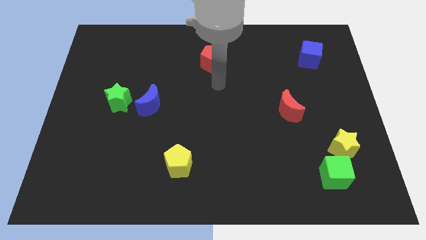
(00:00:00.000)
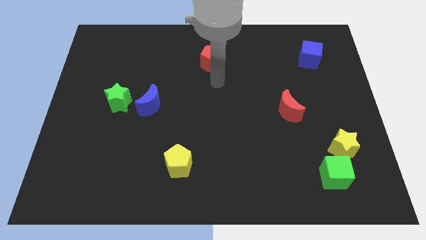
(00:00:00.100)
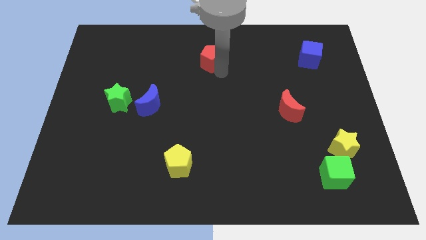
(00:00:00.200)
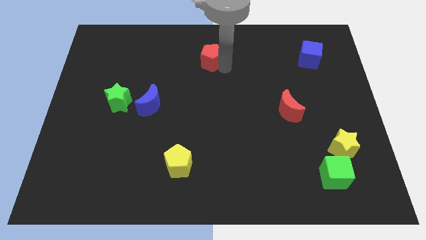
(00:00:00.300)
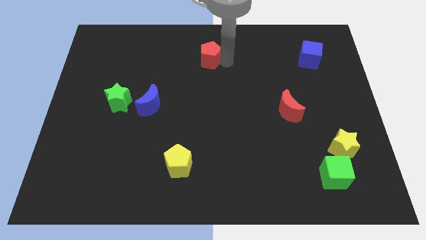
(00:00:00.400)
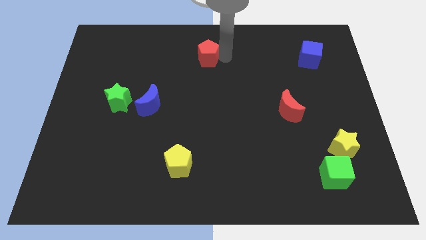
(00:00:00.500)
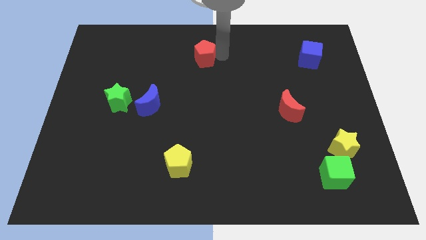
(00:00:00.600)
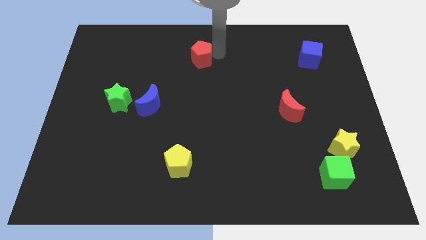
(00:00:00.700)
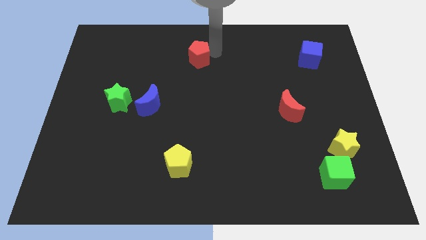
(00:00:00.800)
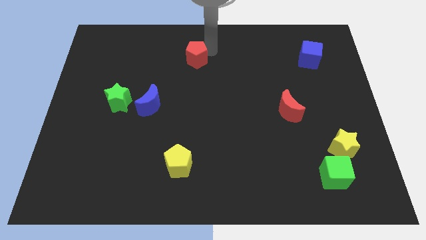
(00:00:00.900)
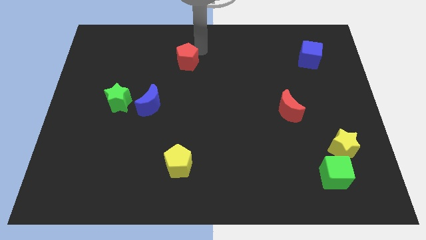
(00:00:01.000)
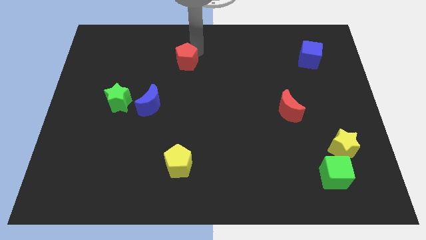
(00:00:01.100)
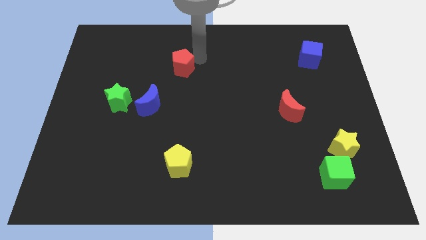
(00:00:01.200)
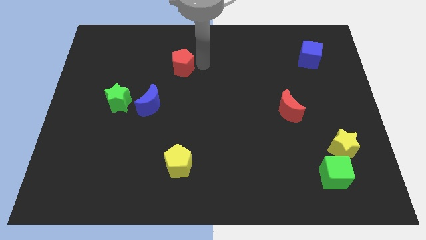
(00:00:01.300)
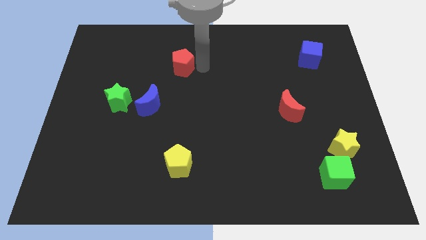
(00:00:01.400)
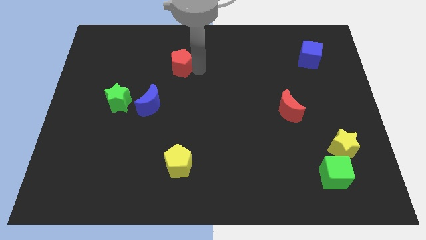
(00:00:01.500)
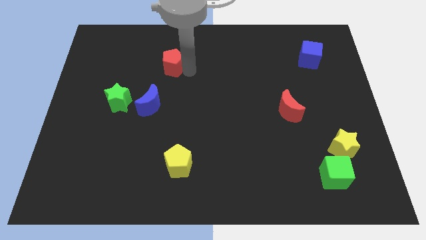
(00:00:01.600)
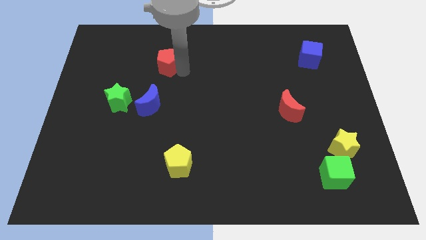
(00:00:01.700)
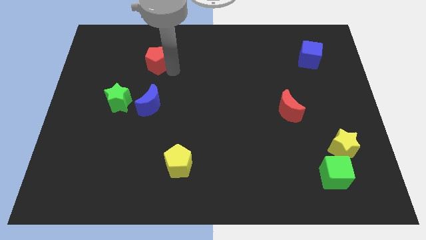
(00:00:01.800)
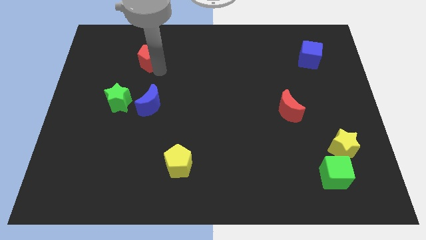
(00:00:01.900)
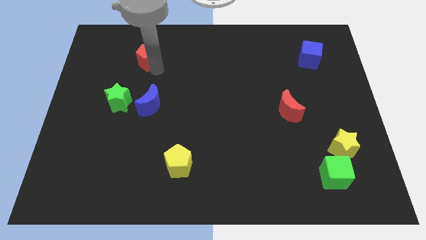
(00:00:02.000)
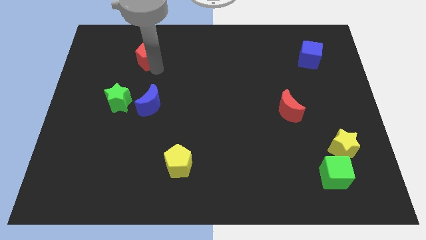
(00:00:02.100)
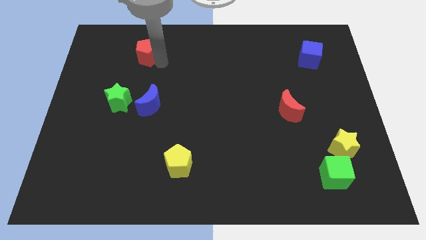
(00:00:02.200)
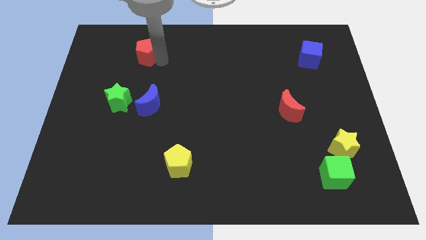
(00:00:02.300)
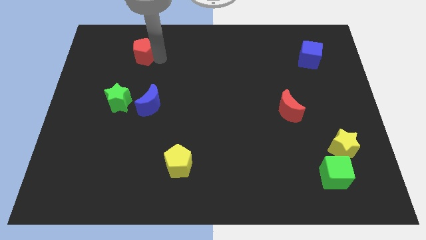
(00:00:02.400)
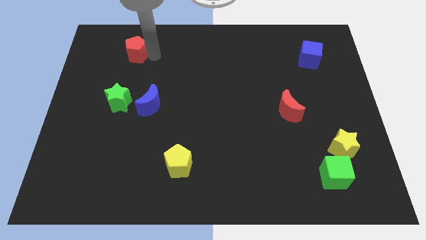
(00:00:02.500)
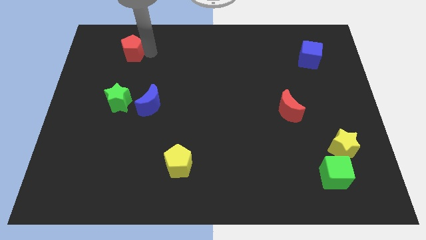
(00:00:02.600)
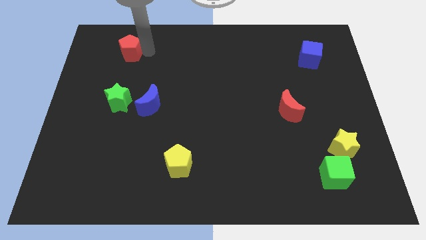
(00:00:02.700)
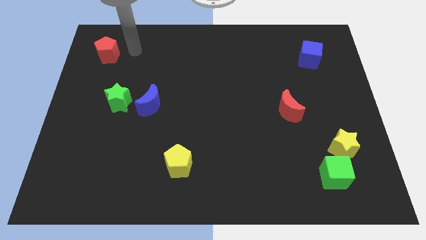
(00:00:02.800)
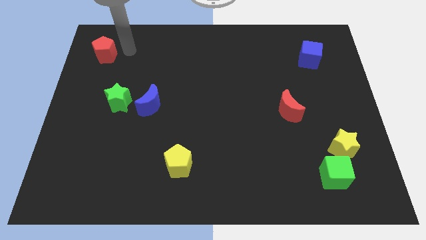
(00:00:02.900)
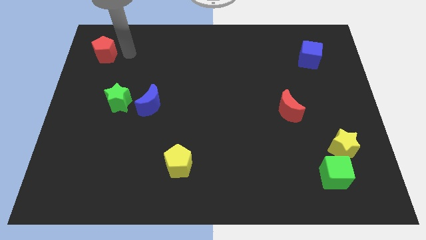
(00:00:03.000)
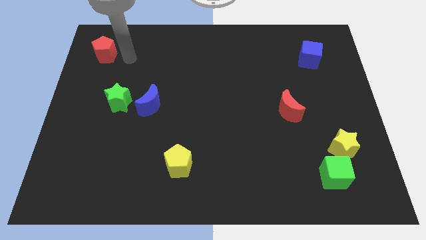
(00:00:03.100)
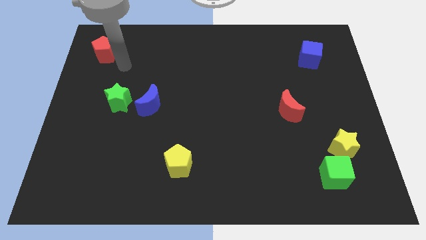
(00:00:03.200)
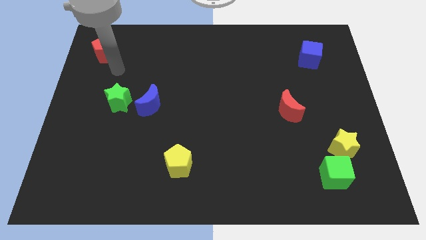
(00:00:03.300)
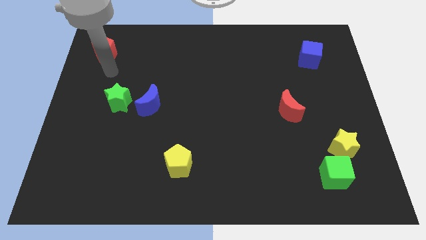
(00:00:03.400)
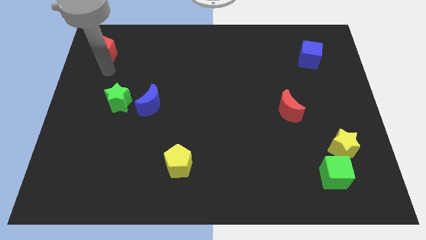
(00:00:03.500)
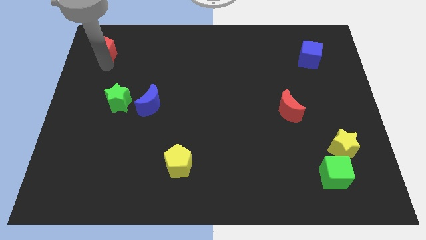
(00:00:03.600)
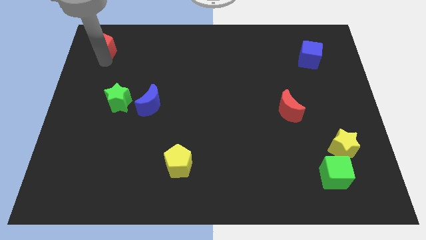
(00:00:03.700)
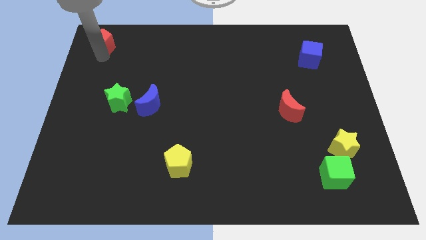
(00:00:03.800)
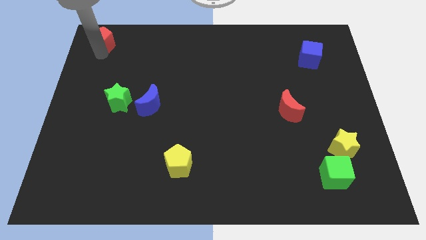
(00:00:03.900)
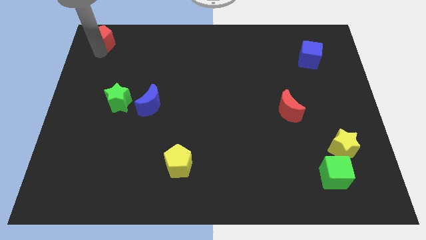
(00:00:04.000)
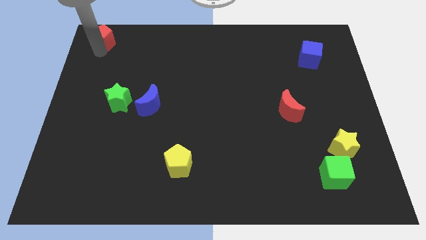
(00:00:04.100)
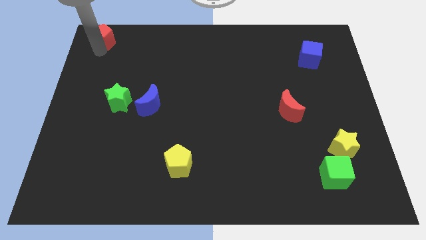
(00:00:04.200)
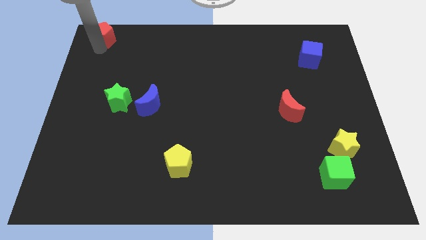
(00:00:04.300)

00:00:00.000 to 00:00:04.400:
move the red pentagon to the top left of the board

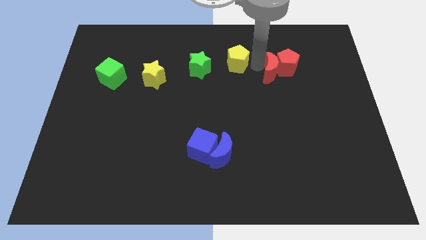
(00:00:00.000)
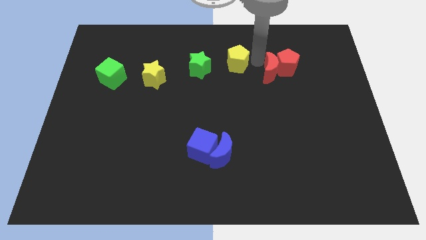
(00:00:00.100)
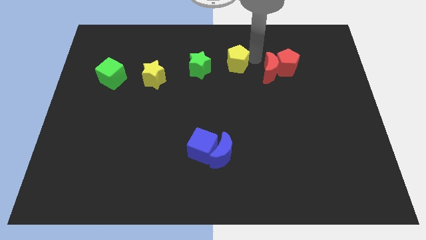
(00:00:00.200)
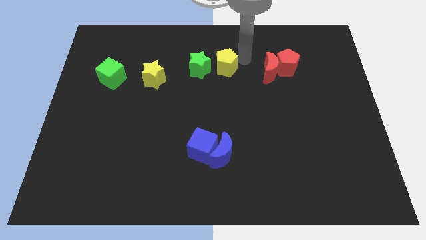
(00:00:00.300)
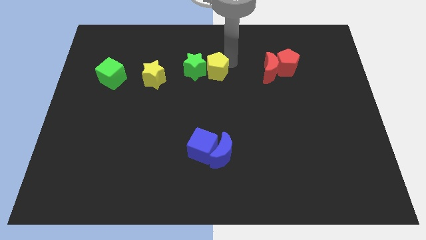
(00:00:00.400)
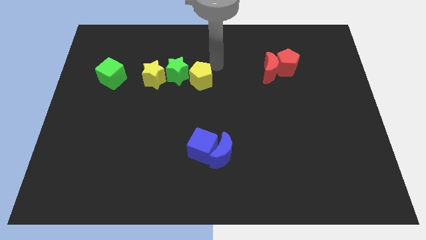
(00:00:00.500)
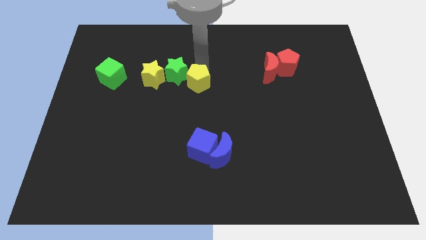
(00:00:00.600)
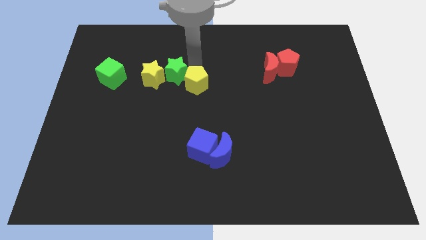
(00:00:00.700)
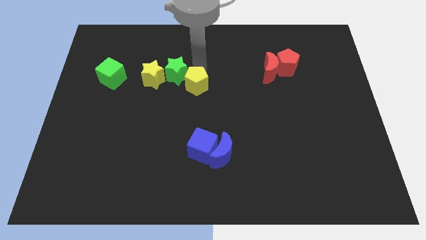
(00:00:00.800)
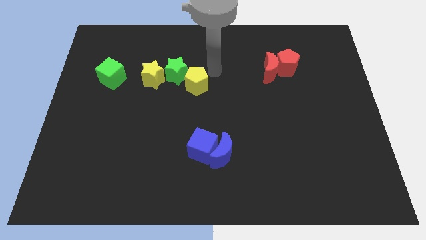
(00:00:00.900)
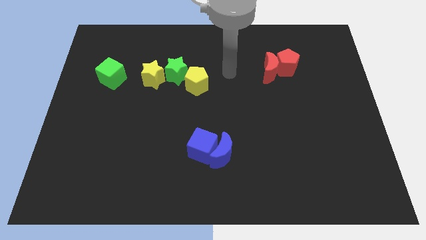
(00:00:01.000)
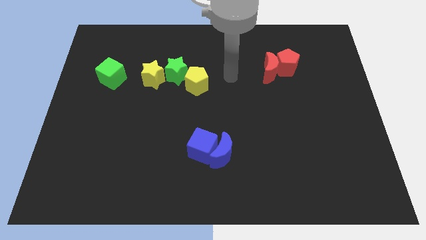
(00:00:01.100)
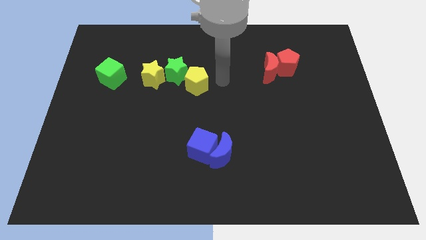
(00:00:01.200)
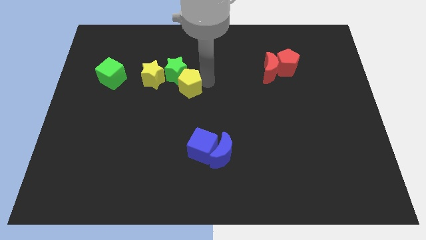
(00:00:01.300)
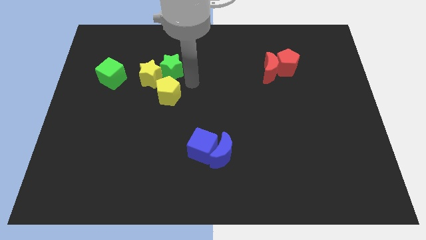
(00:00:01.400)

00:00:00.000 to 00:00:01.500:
slide the yellow pentagon below the green star

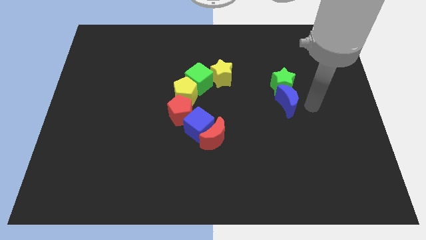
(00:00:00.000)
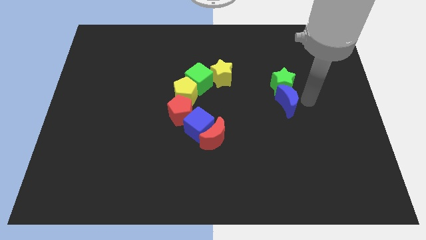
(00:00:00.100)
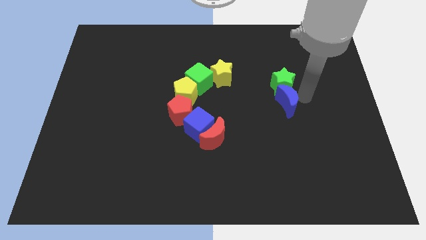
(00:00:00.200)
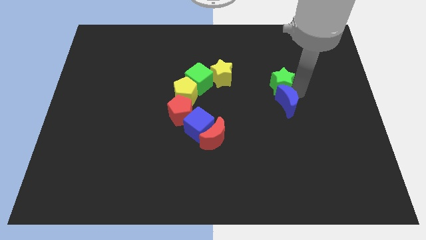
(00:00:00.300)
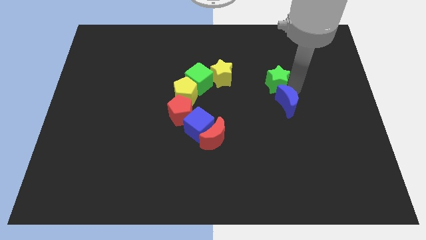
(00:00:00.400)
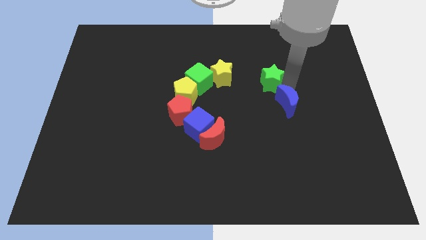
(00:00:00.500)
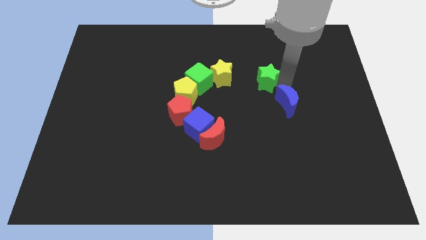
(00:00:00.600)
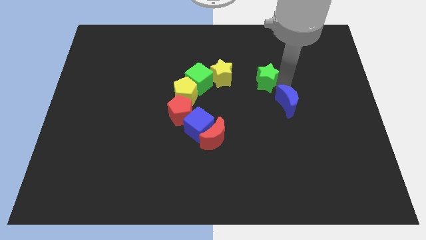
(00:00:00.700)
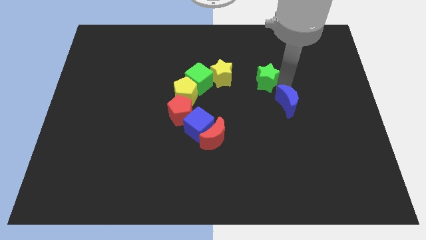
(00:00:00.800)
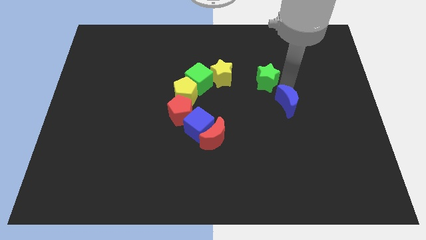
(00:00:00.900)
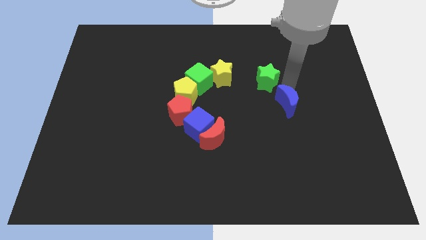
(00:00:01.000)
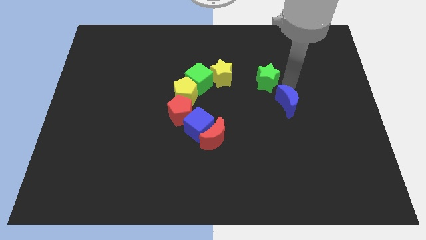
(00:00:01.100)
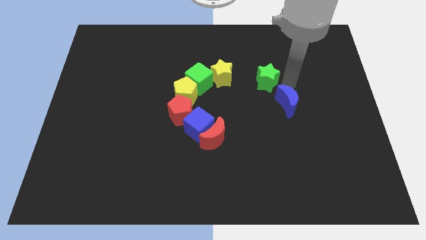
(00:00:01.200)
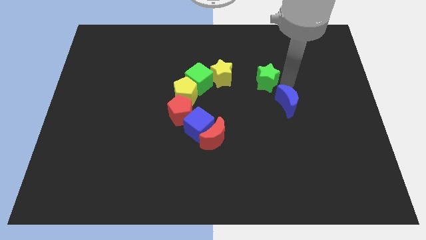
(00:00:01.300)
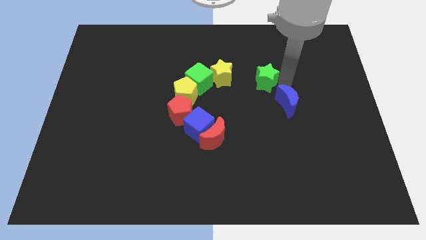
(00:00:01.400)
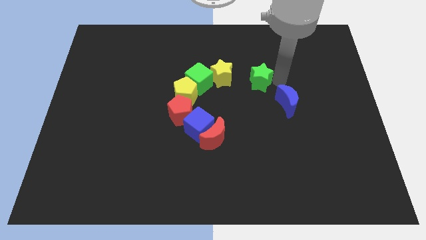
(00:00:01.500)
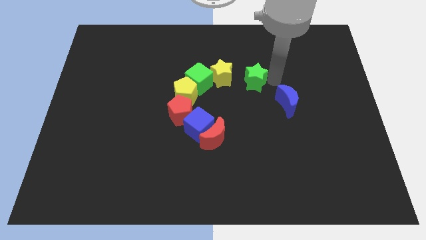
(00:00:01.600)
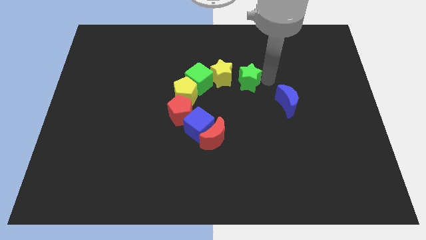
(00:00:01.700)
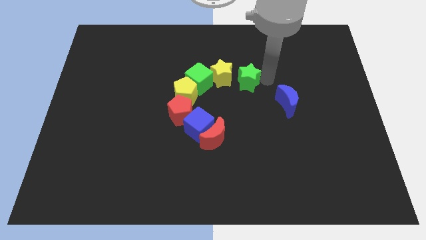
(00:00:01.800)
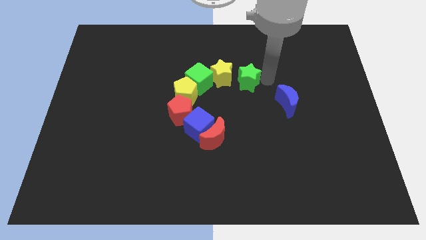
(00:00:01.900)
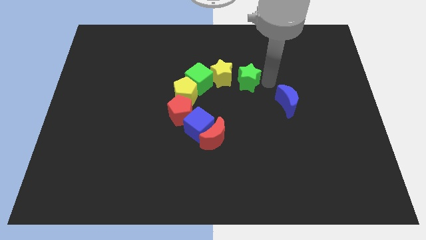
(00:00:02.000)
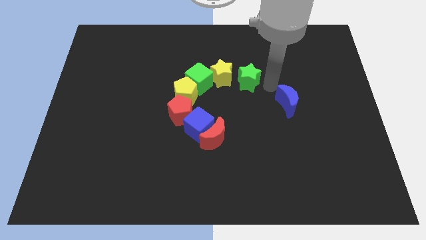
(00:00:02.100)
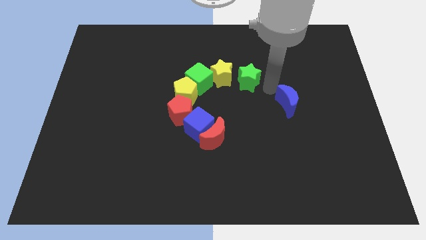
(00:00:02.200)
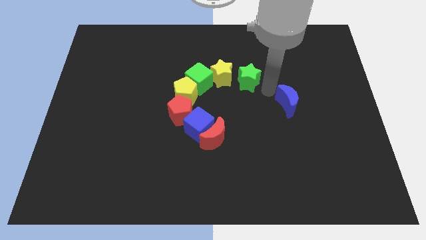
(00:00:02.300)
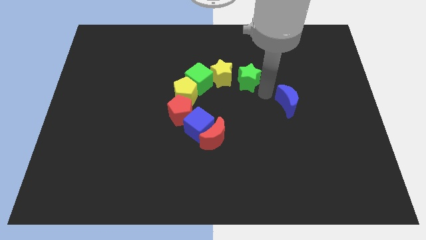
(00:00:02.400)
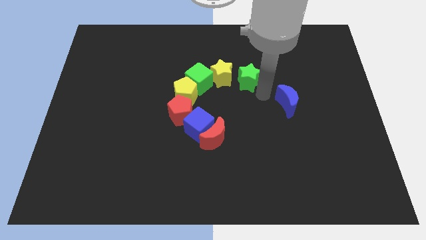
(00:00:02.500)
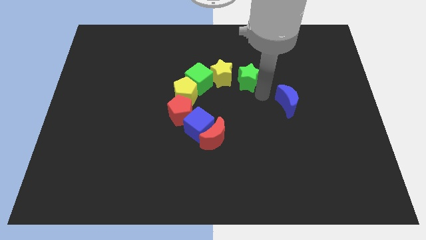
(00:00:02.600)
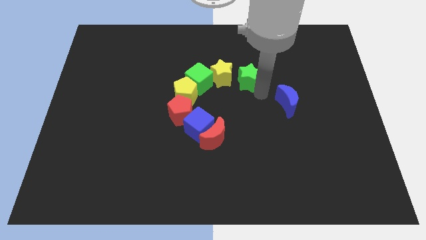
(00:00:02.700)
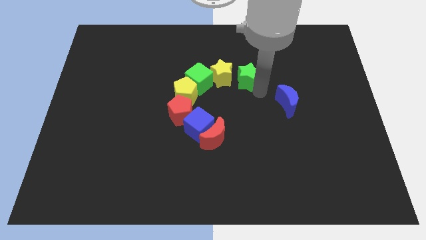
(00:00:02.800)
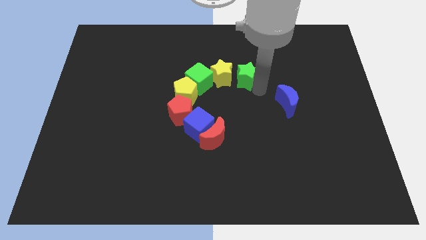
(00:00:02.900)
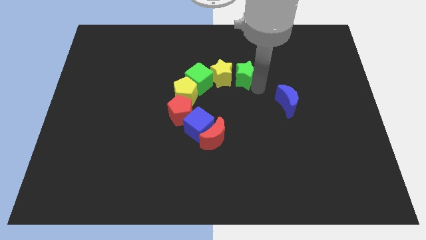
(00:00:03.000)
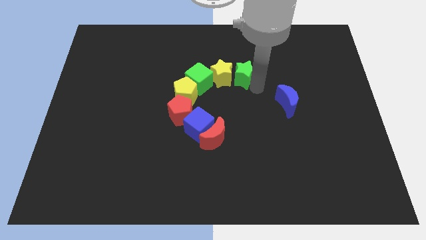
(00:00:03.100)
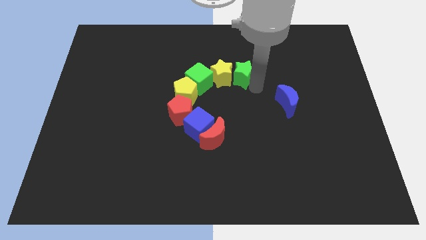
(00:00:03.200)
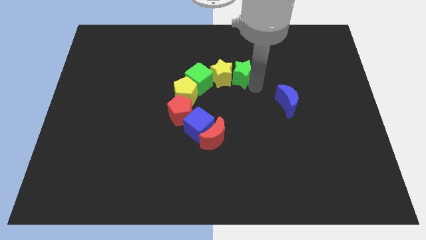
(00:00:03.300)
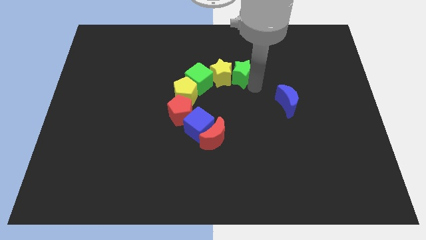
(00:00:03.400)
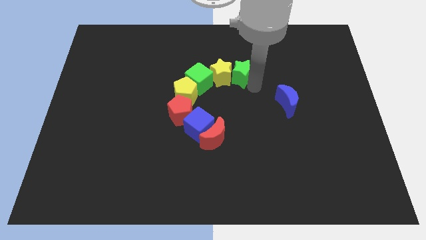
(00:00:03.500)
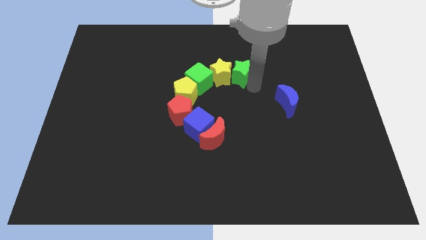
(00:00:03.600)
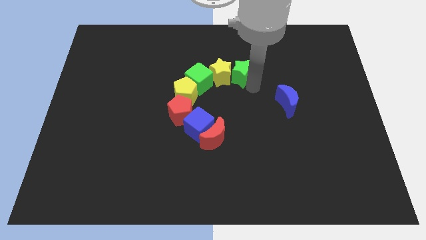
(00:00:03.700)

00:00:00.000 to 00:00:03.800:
push the green star into the yellow star
